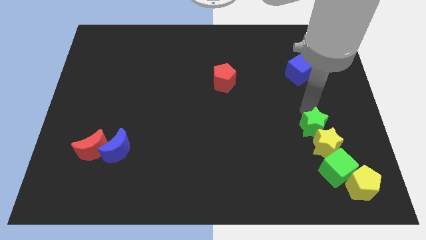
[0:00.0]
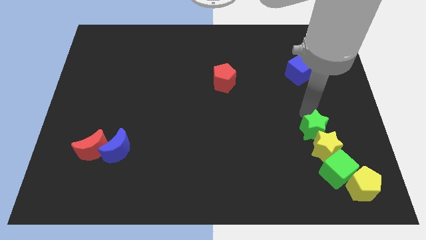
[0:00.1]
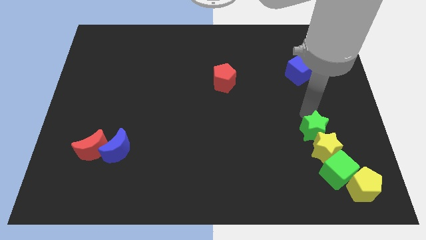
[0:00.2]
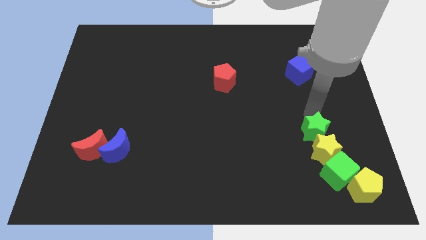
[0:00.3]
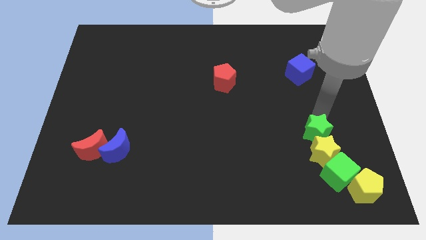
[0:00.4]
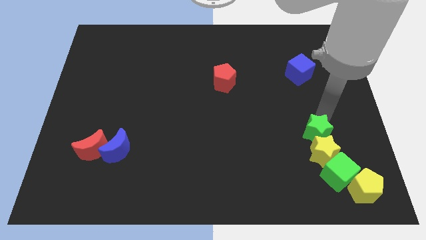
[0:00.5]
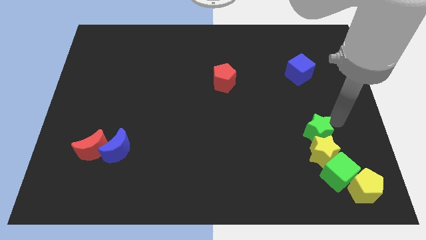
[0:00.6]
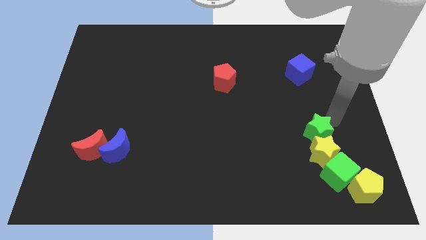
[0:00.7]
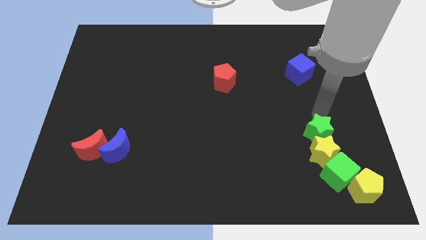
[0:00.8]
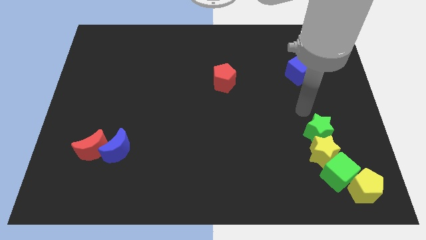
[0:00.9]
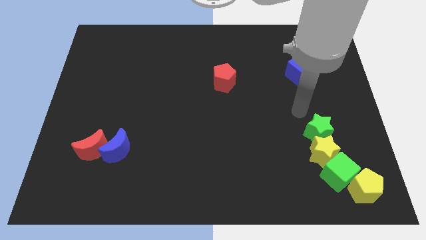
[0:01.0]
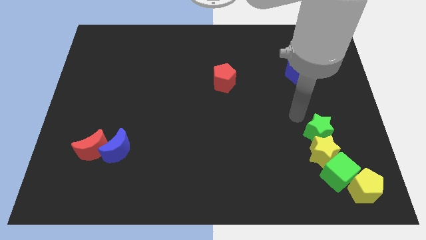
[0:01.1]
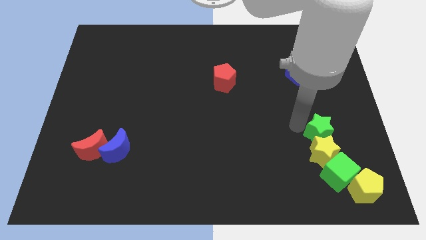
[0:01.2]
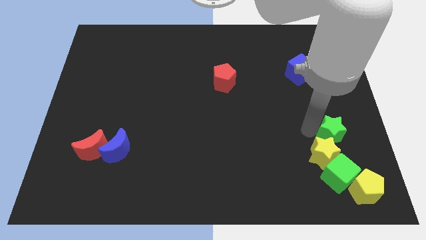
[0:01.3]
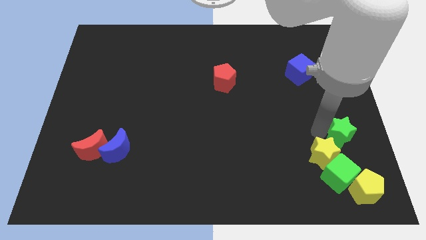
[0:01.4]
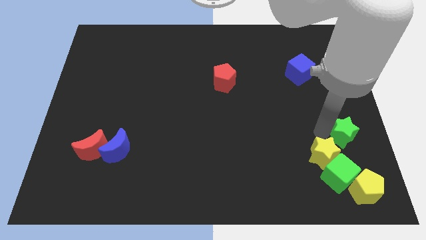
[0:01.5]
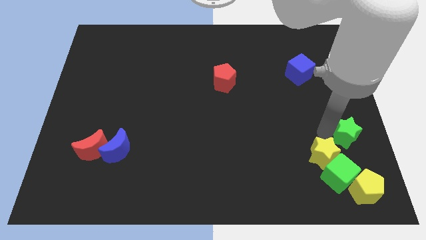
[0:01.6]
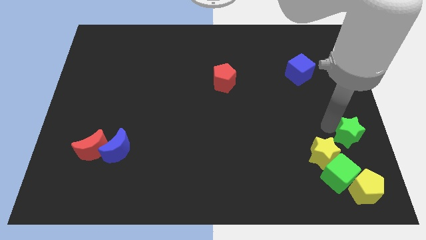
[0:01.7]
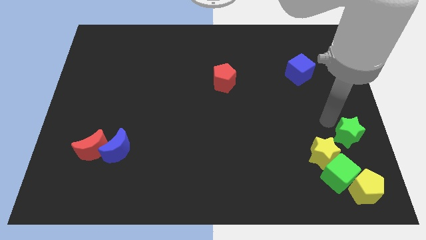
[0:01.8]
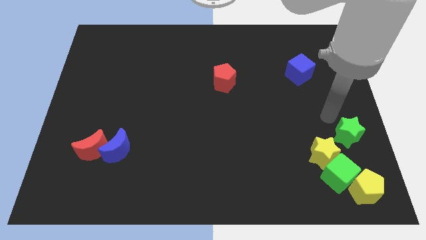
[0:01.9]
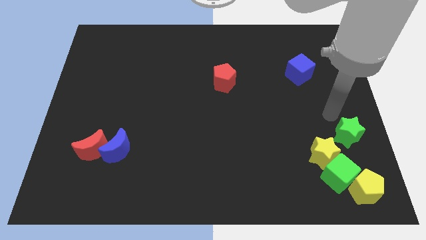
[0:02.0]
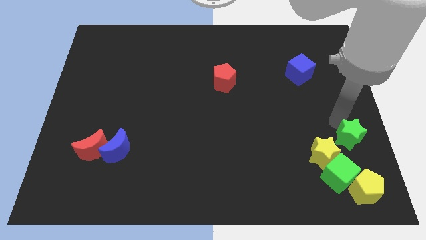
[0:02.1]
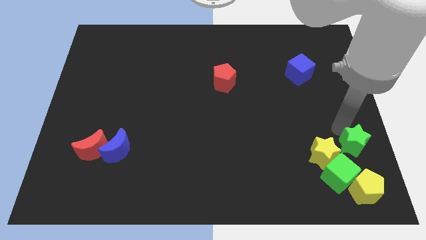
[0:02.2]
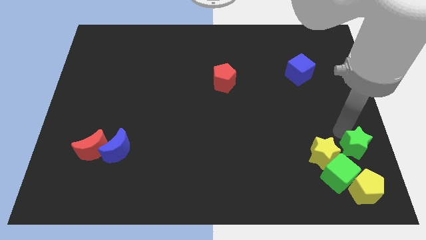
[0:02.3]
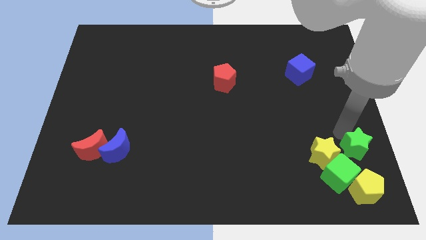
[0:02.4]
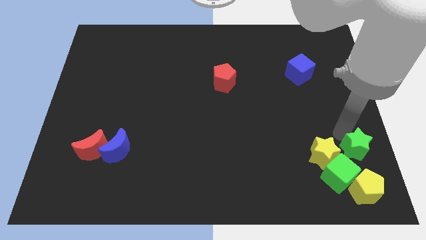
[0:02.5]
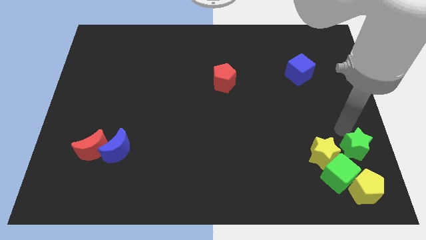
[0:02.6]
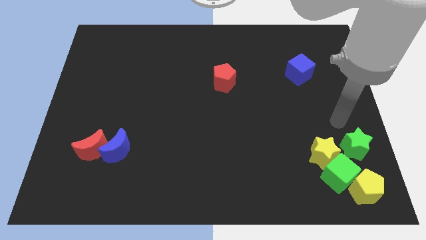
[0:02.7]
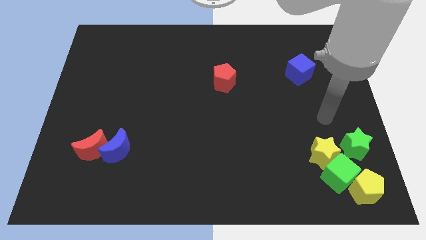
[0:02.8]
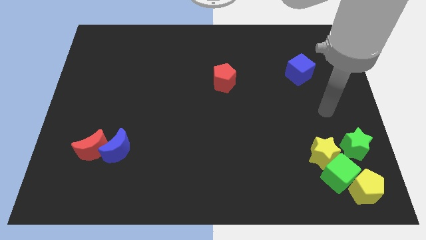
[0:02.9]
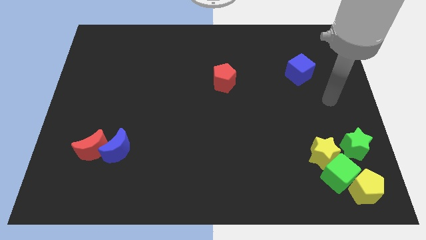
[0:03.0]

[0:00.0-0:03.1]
move the green star to the right side of the green cube

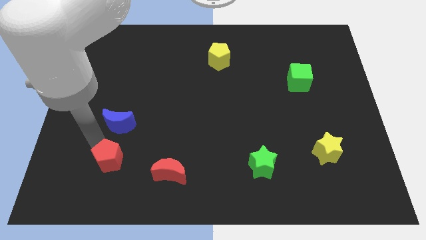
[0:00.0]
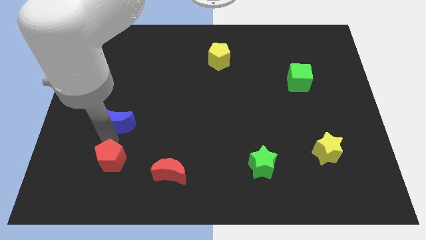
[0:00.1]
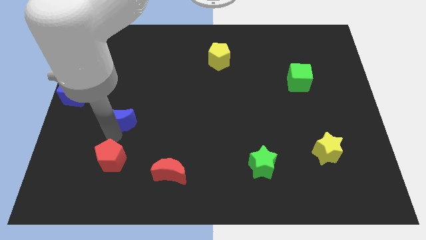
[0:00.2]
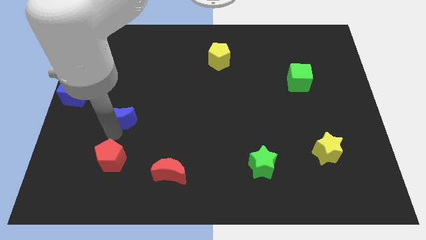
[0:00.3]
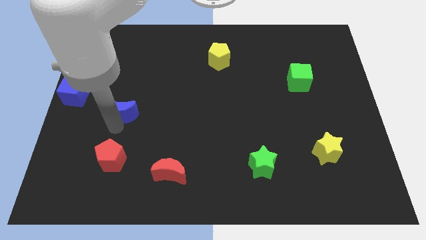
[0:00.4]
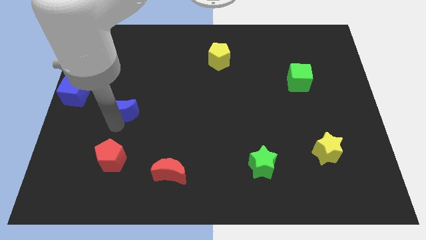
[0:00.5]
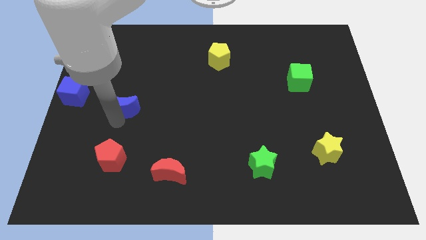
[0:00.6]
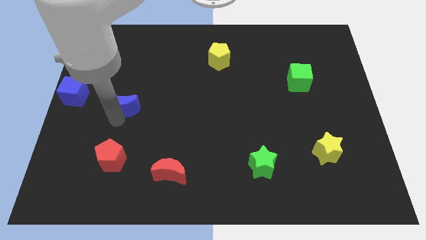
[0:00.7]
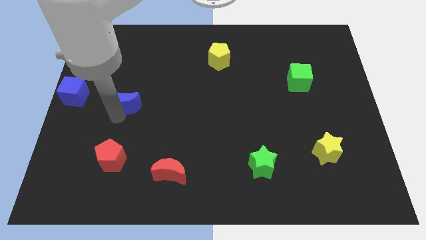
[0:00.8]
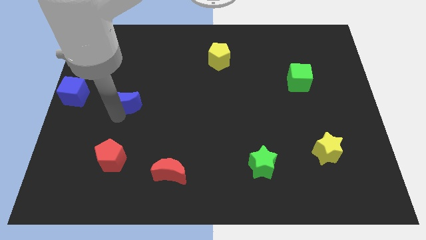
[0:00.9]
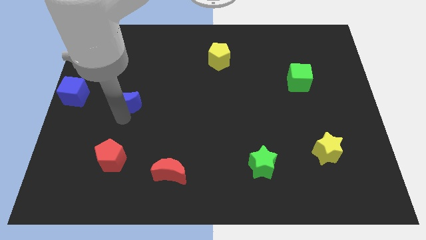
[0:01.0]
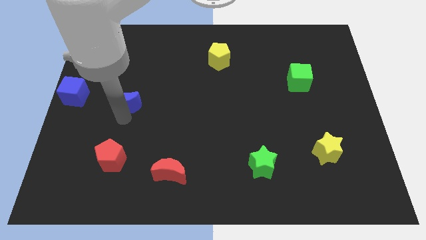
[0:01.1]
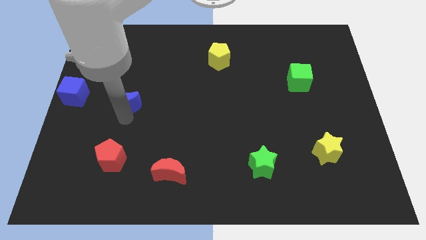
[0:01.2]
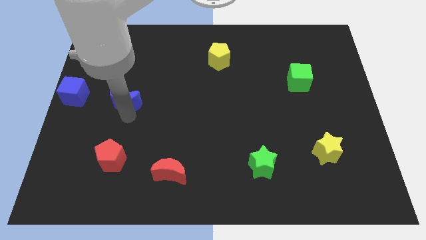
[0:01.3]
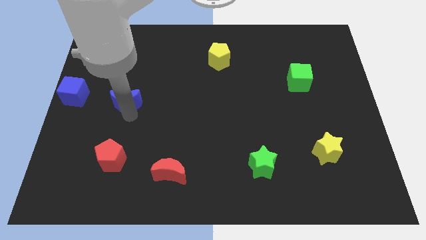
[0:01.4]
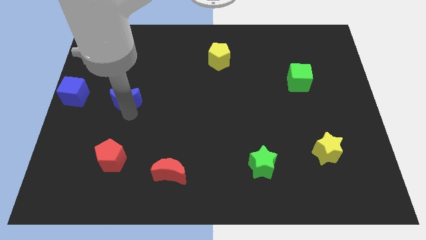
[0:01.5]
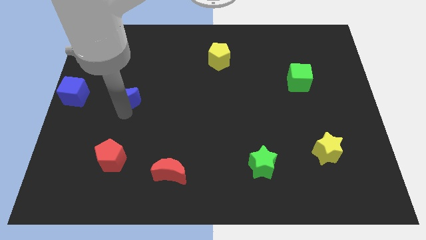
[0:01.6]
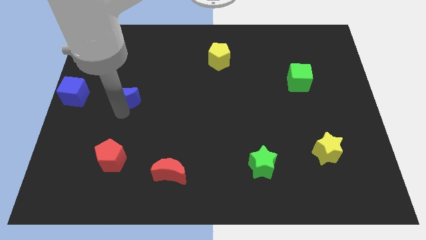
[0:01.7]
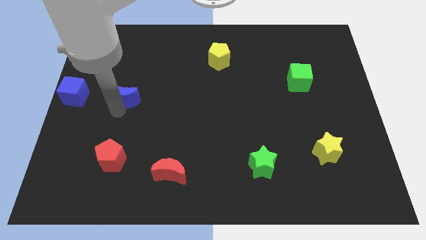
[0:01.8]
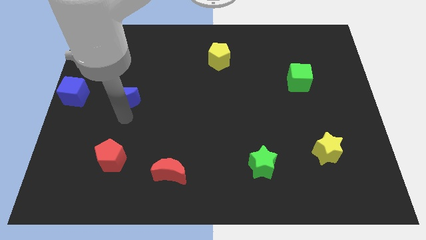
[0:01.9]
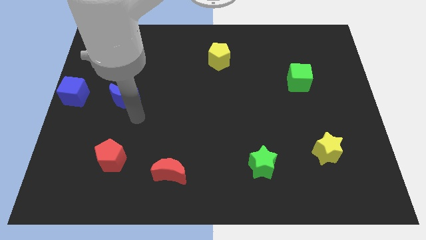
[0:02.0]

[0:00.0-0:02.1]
move the blue moon to the right side of blue cube

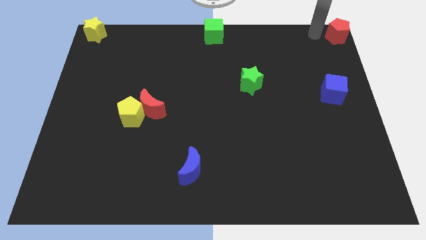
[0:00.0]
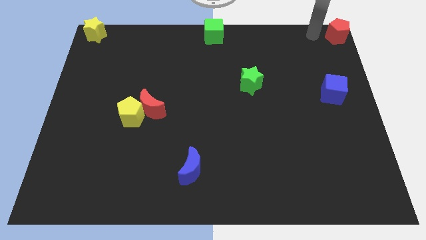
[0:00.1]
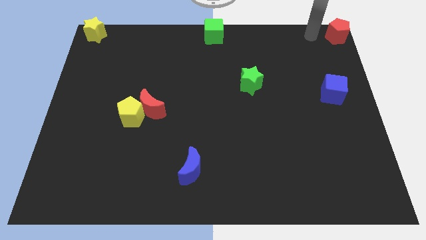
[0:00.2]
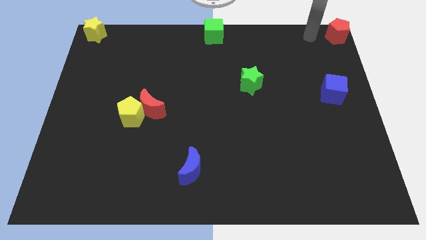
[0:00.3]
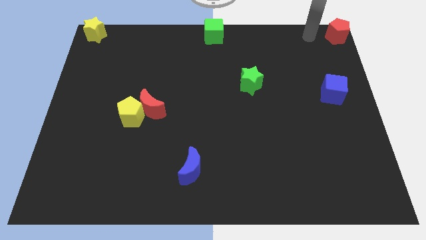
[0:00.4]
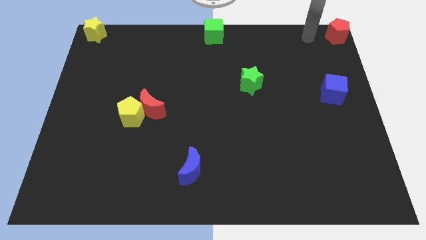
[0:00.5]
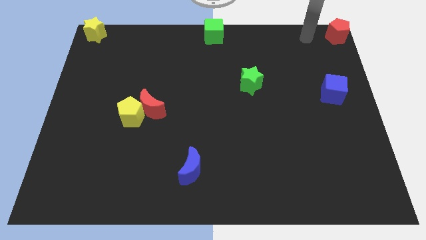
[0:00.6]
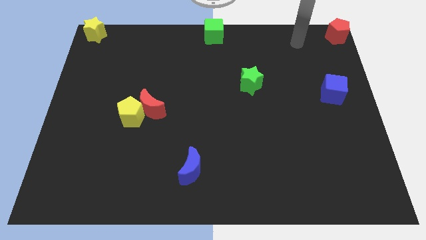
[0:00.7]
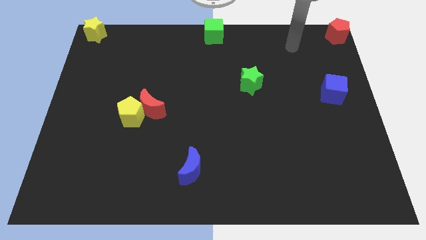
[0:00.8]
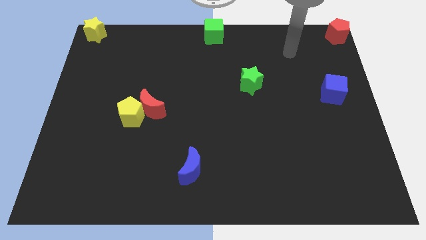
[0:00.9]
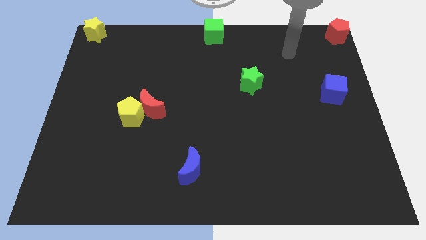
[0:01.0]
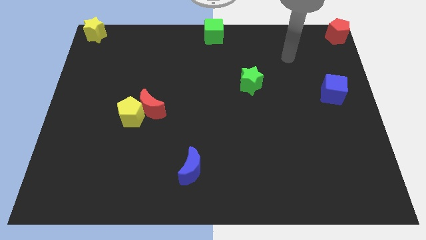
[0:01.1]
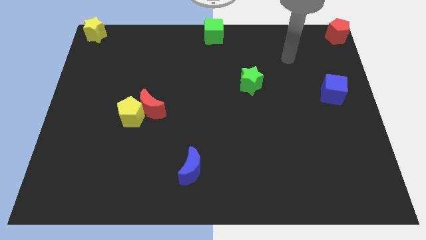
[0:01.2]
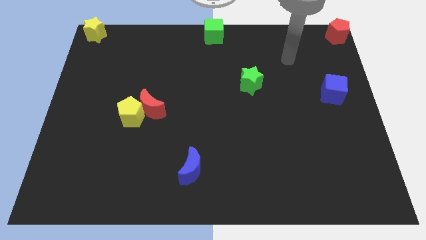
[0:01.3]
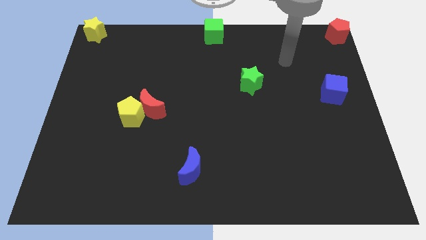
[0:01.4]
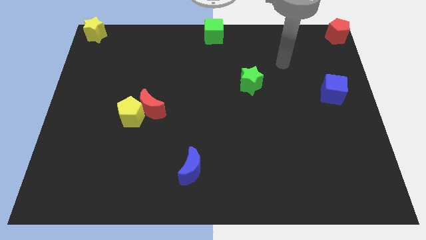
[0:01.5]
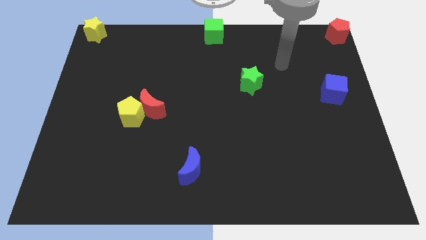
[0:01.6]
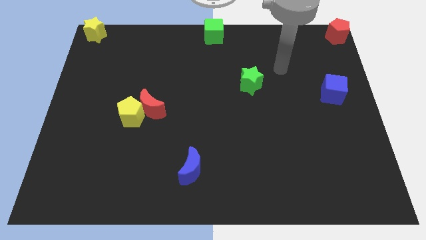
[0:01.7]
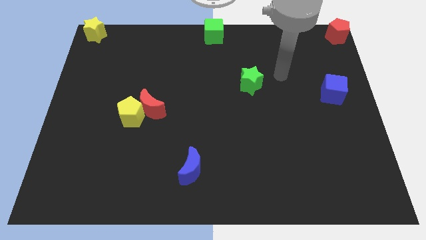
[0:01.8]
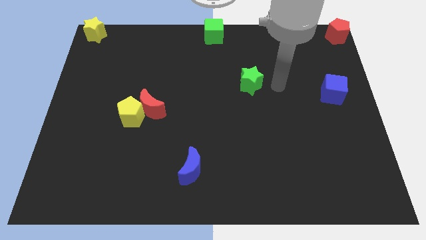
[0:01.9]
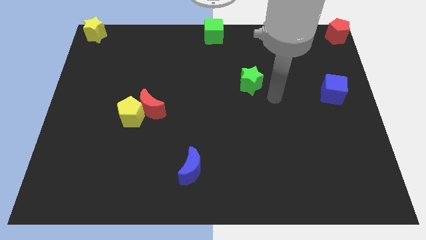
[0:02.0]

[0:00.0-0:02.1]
move your arm away from the red pentagon

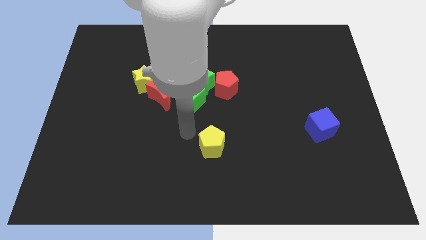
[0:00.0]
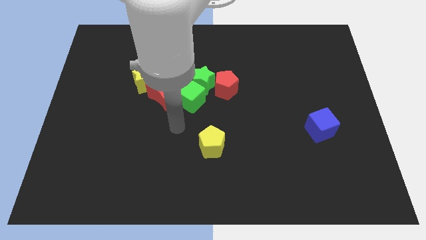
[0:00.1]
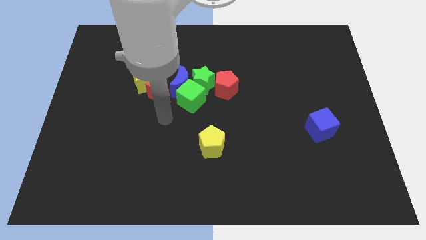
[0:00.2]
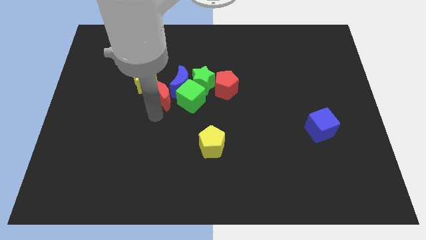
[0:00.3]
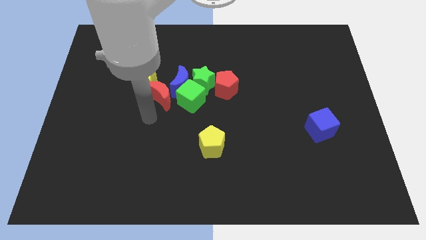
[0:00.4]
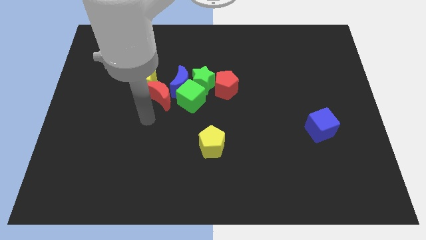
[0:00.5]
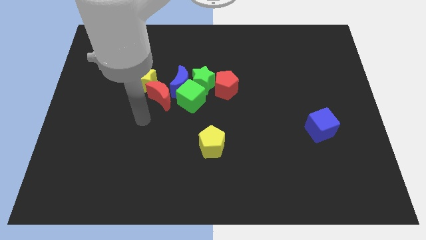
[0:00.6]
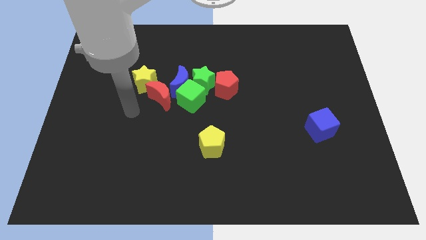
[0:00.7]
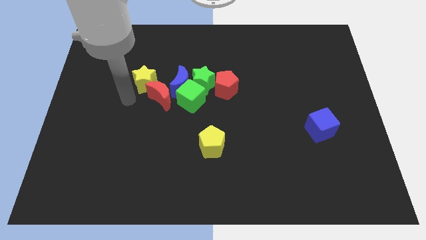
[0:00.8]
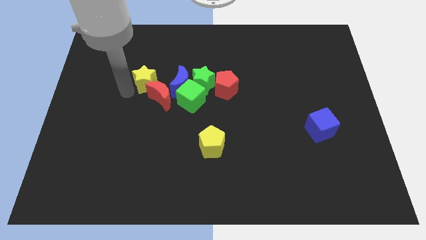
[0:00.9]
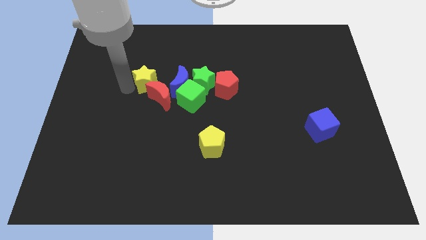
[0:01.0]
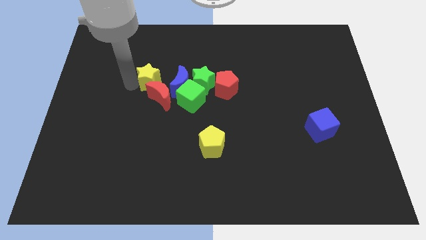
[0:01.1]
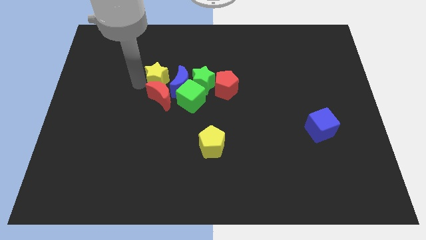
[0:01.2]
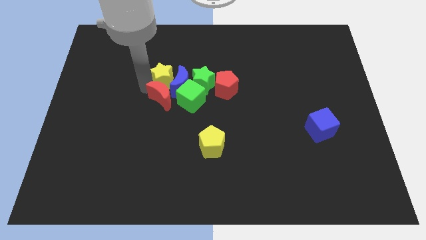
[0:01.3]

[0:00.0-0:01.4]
push the yellow star into the blue crescent

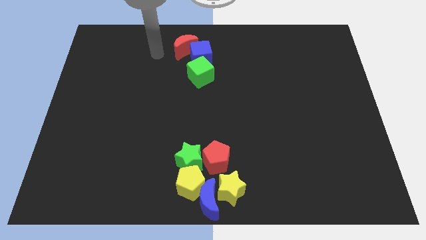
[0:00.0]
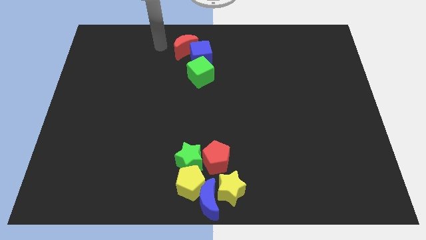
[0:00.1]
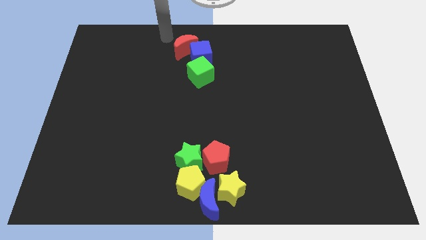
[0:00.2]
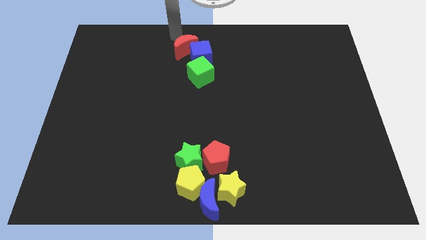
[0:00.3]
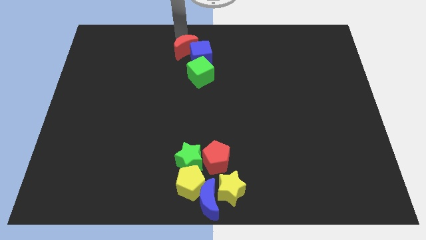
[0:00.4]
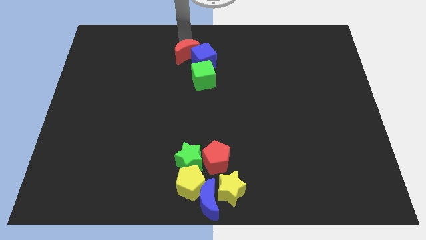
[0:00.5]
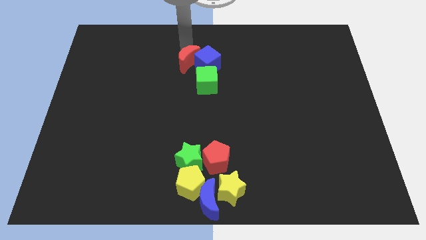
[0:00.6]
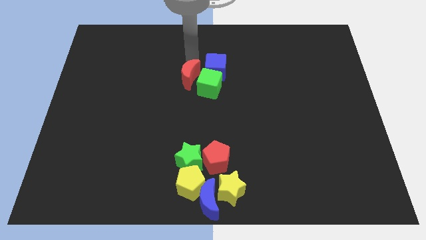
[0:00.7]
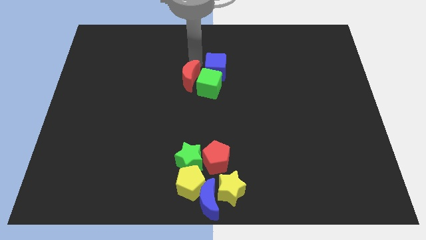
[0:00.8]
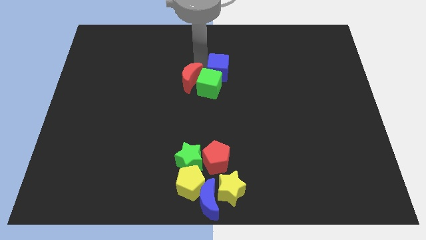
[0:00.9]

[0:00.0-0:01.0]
push red crescent blue cube and green cube towards the bottom side of the board
